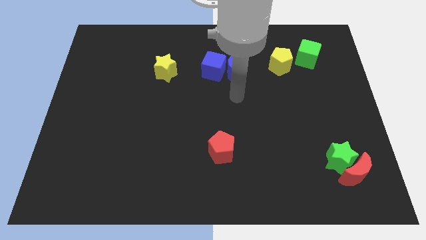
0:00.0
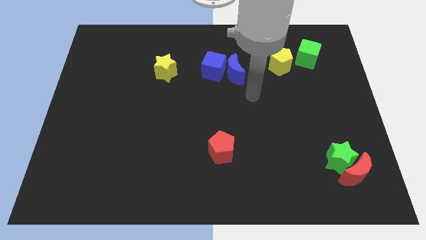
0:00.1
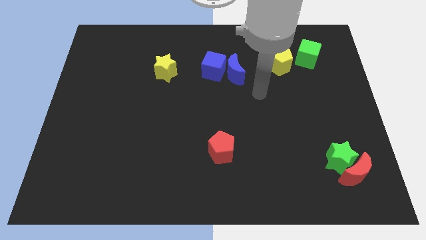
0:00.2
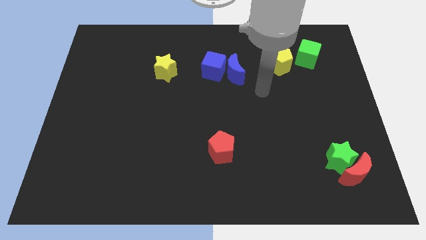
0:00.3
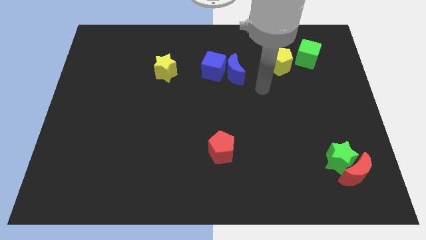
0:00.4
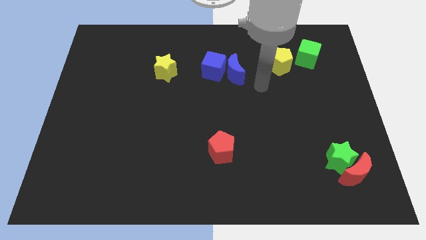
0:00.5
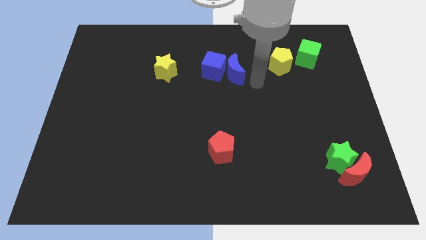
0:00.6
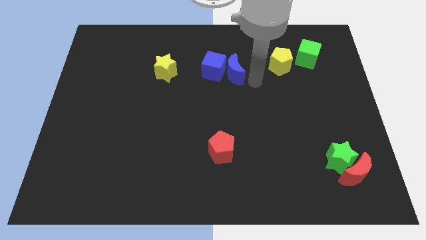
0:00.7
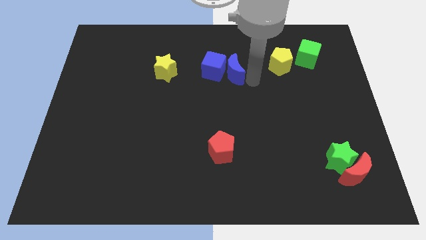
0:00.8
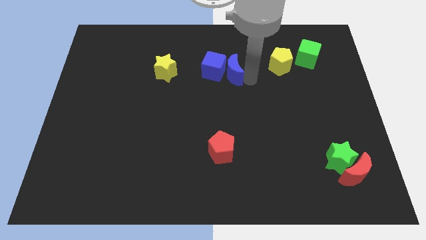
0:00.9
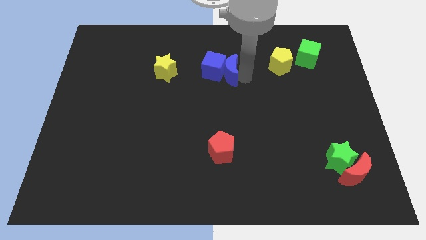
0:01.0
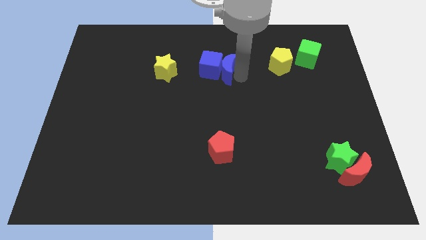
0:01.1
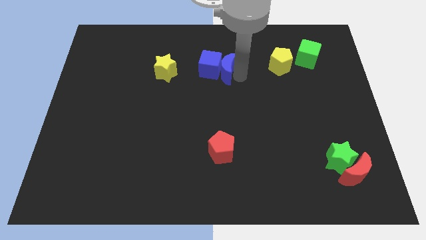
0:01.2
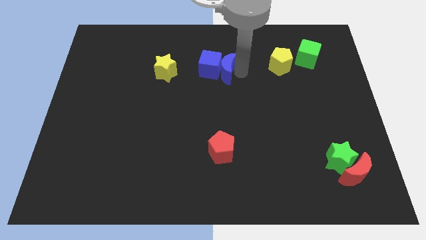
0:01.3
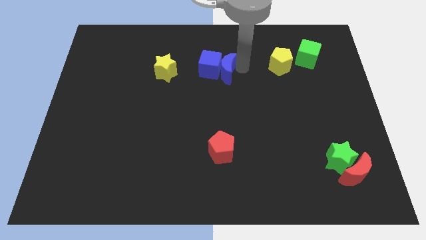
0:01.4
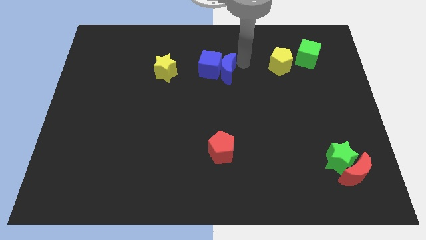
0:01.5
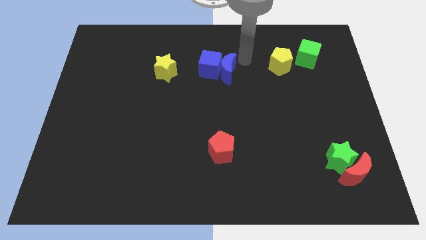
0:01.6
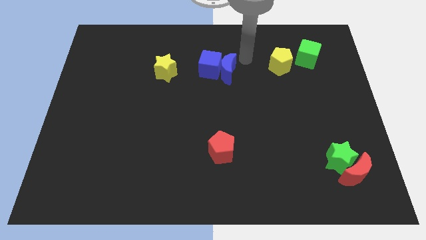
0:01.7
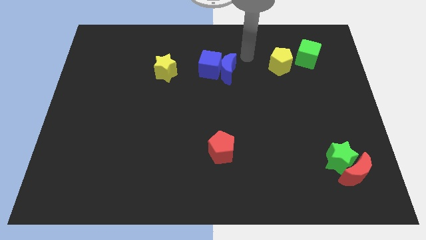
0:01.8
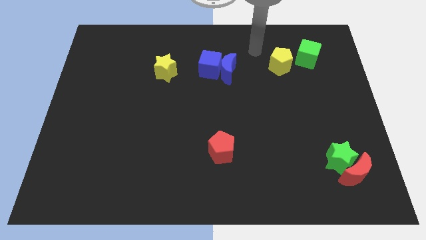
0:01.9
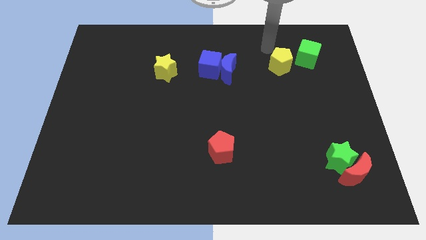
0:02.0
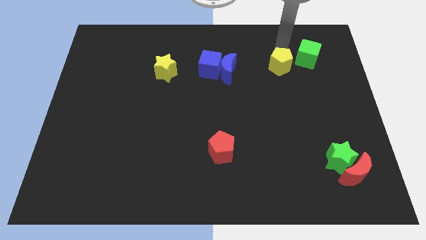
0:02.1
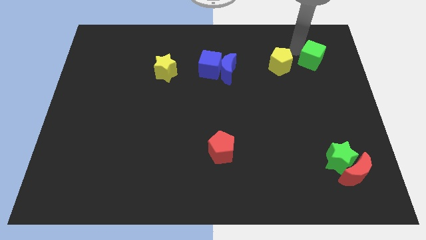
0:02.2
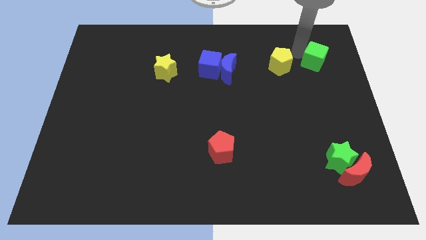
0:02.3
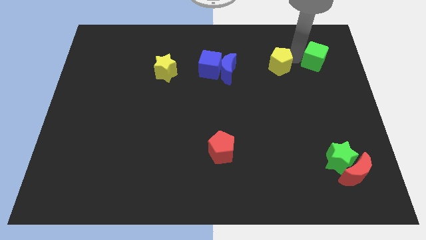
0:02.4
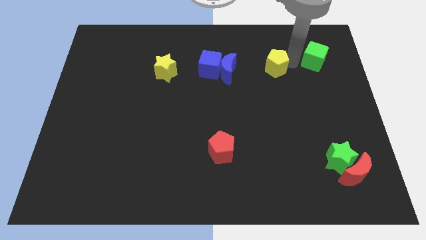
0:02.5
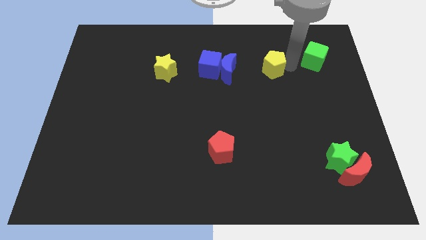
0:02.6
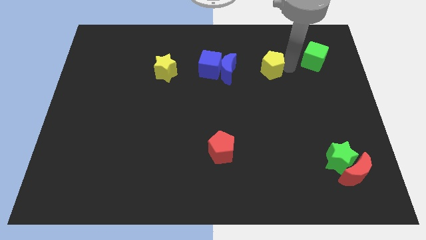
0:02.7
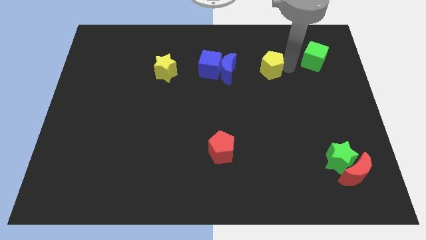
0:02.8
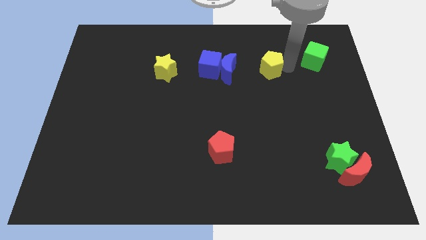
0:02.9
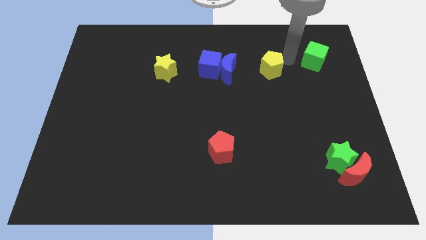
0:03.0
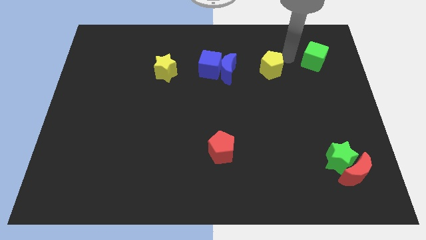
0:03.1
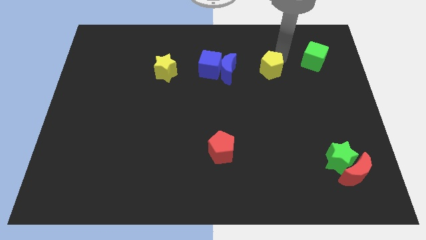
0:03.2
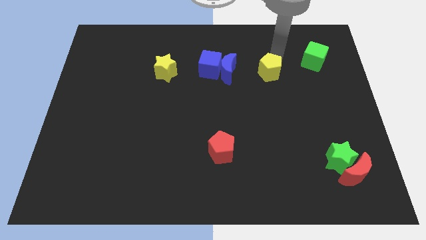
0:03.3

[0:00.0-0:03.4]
separate yellow pentagon and green cube

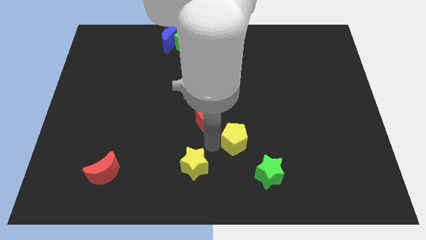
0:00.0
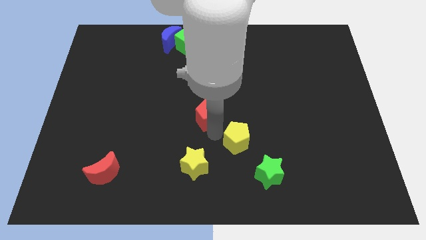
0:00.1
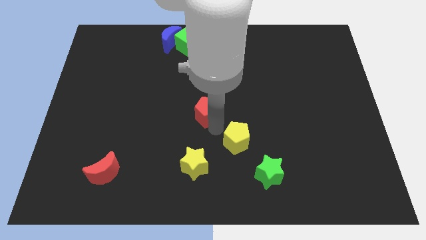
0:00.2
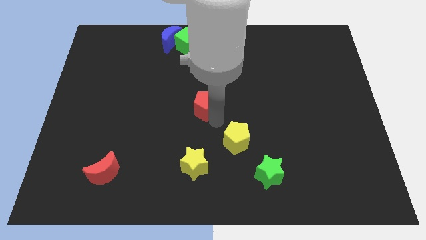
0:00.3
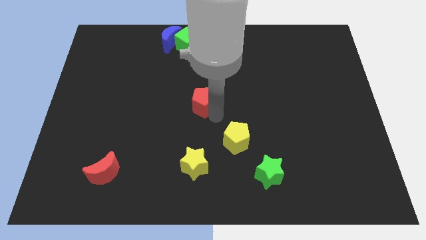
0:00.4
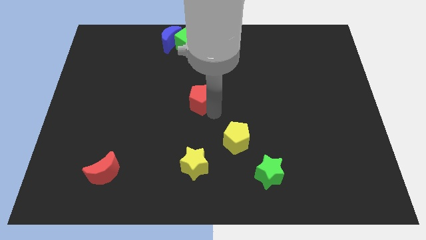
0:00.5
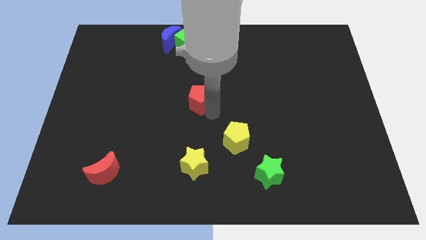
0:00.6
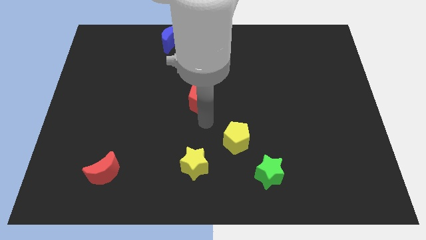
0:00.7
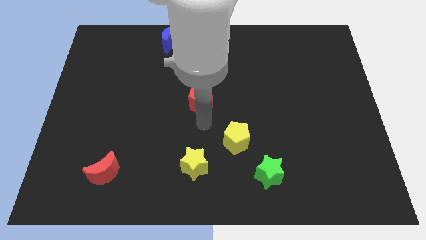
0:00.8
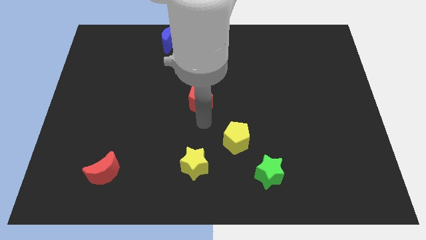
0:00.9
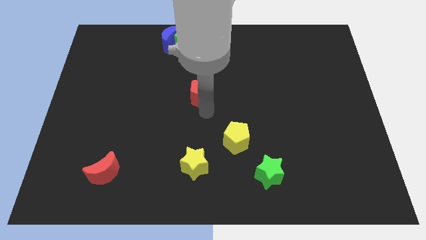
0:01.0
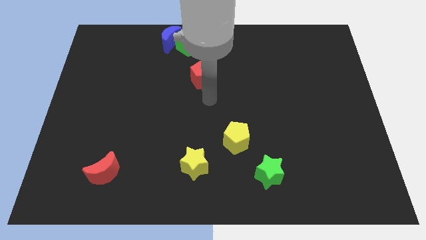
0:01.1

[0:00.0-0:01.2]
push the red pentagon closer to the green cube

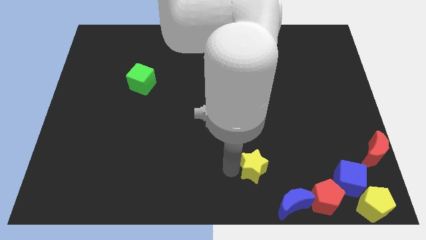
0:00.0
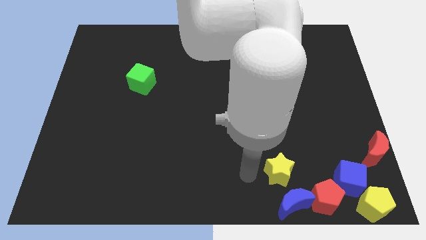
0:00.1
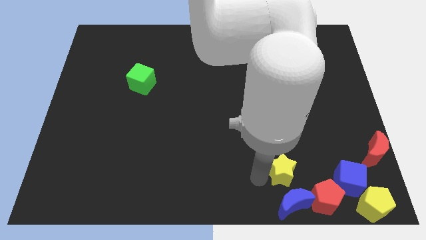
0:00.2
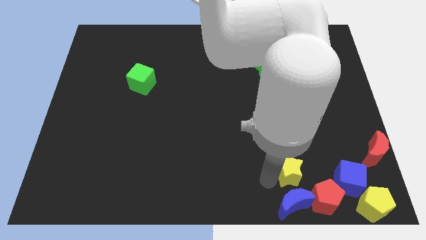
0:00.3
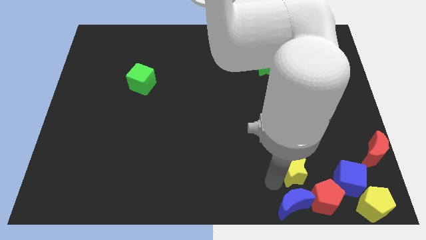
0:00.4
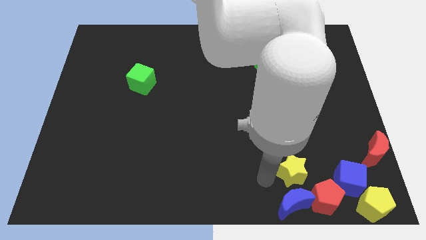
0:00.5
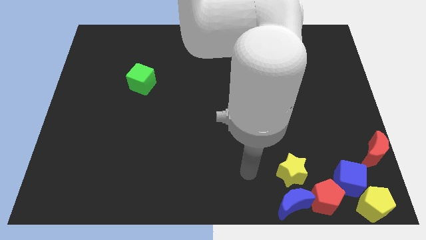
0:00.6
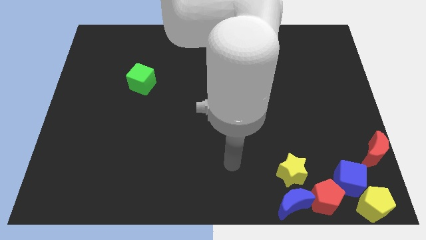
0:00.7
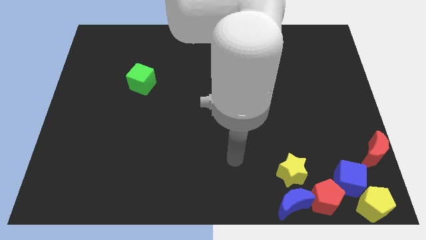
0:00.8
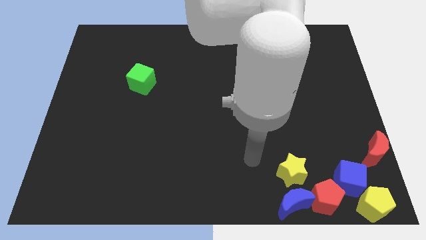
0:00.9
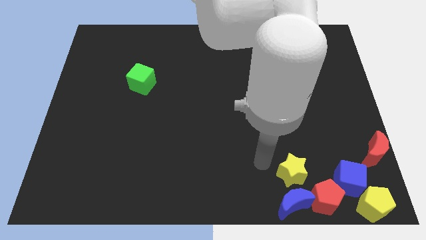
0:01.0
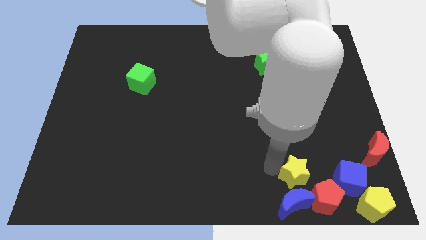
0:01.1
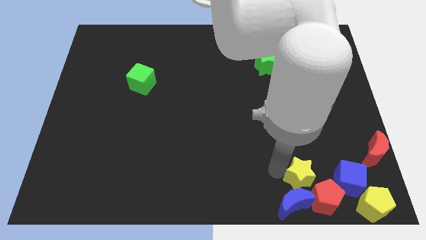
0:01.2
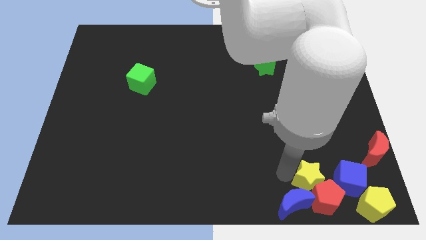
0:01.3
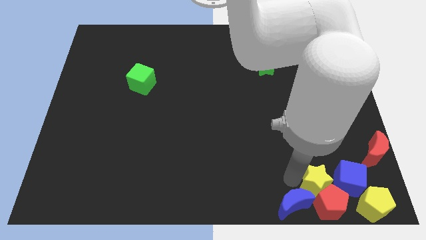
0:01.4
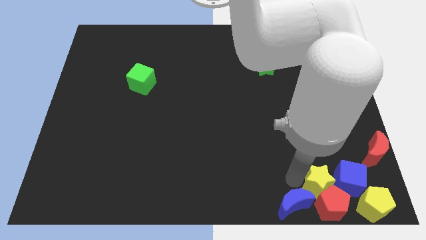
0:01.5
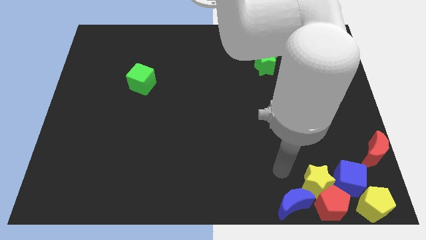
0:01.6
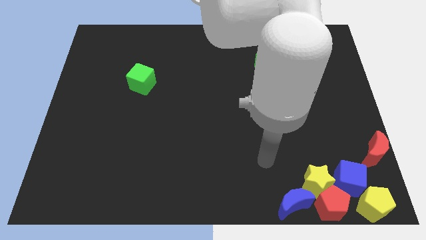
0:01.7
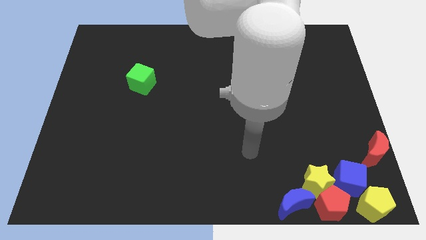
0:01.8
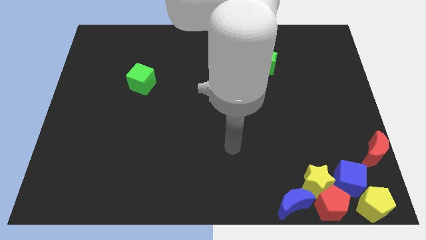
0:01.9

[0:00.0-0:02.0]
move the yellow star into the group of blocks

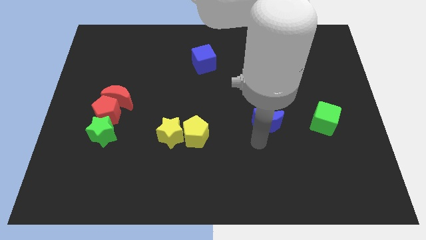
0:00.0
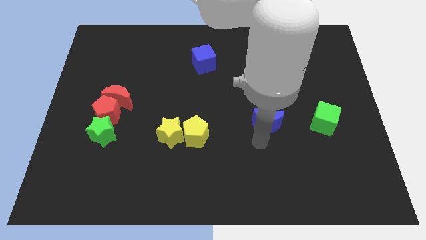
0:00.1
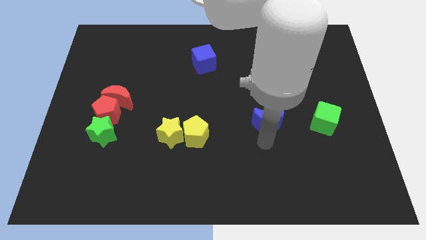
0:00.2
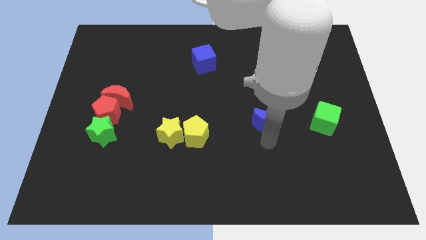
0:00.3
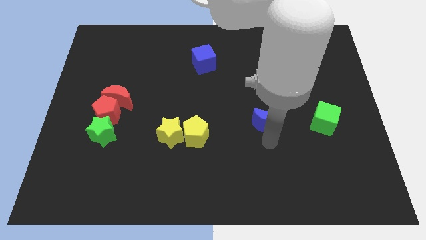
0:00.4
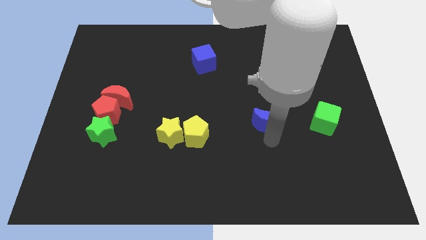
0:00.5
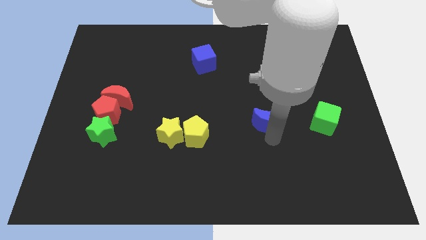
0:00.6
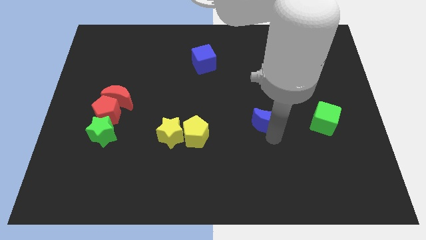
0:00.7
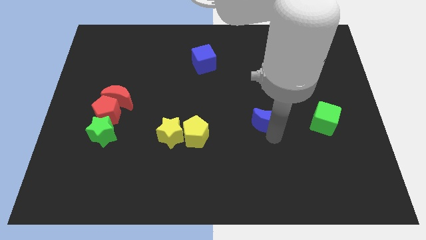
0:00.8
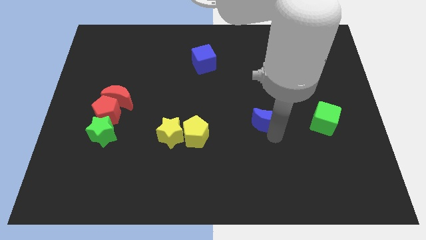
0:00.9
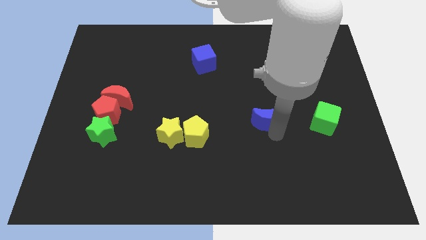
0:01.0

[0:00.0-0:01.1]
tap the bottom of the blue crescent

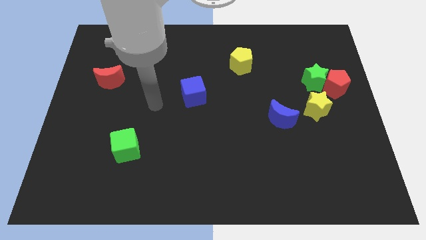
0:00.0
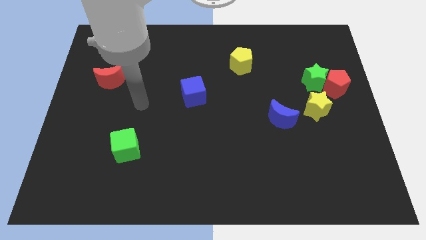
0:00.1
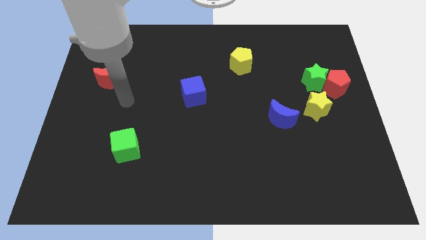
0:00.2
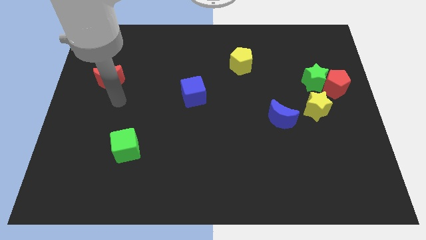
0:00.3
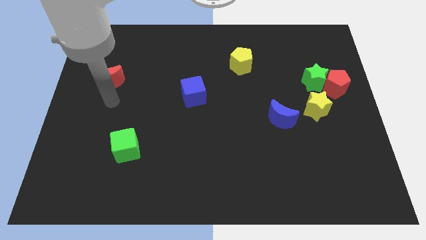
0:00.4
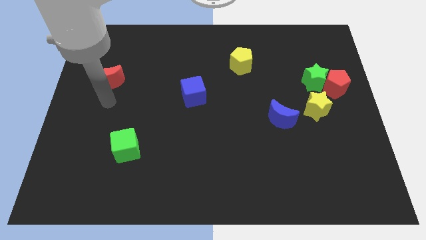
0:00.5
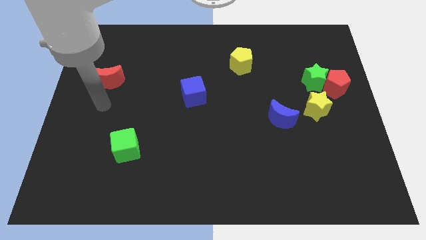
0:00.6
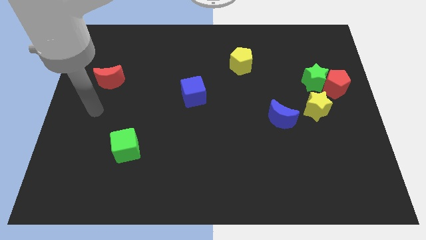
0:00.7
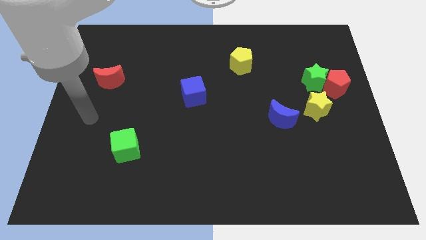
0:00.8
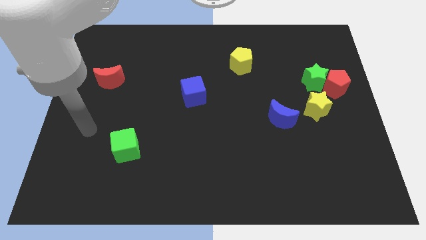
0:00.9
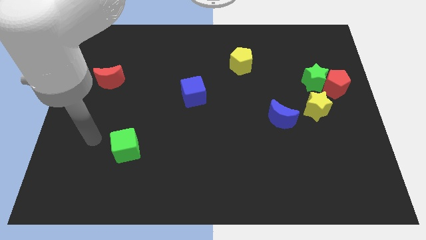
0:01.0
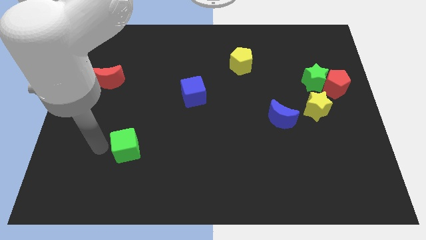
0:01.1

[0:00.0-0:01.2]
point your hand at the left side of the green cube
